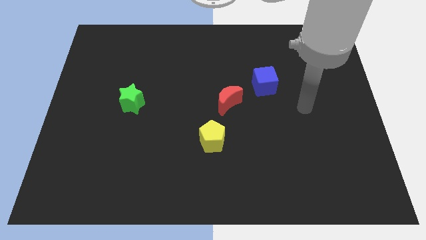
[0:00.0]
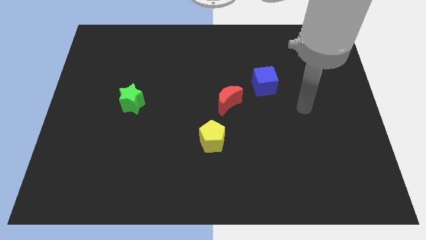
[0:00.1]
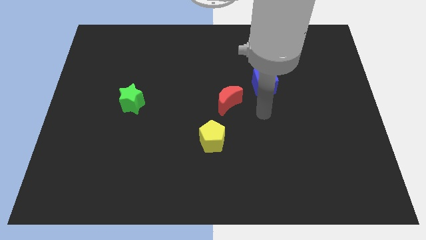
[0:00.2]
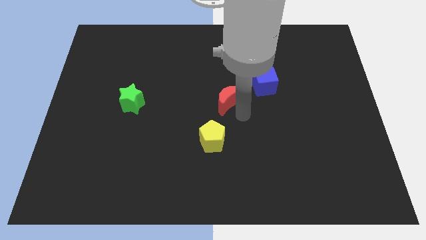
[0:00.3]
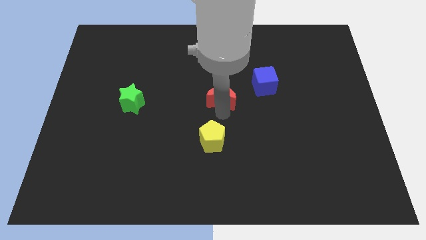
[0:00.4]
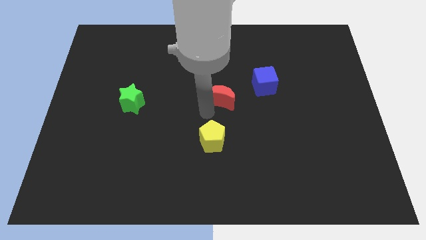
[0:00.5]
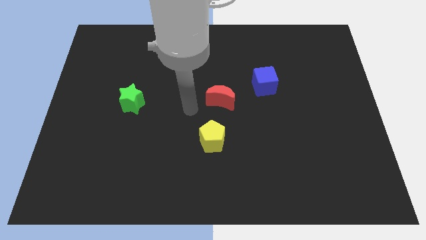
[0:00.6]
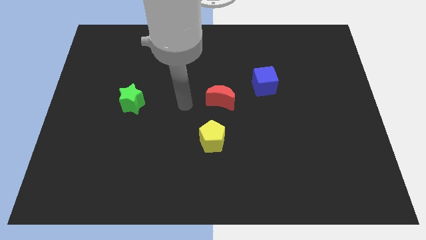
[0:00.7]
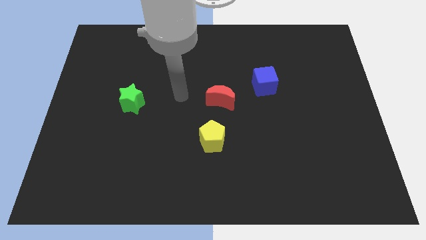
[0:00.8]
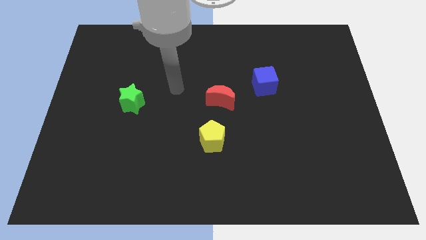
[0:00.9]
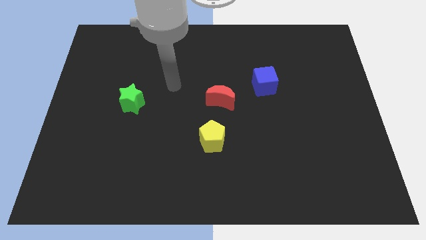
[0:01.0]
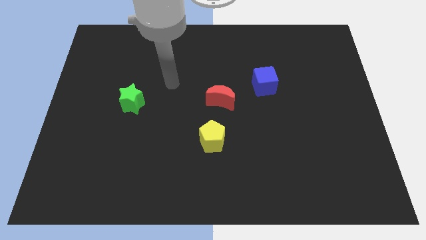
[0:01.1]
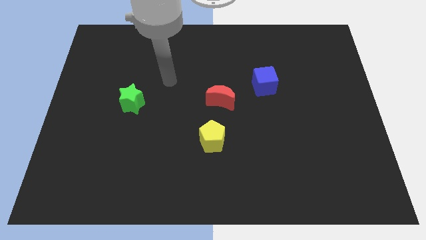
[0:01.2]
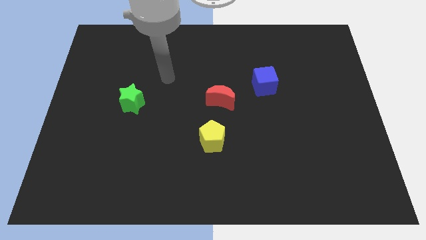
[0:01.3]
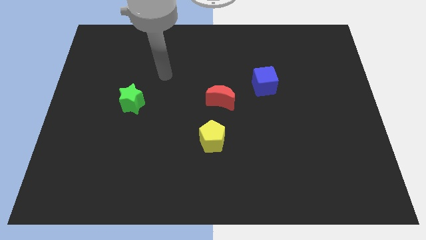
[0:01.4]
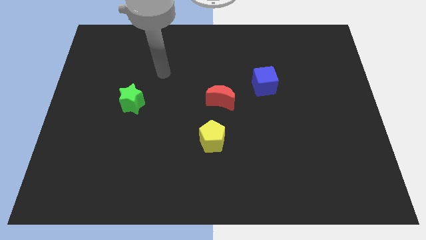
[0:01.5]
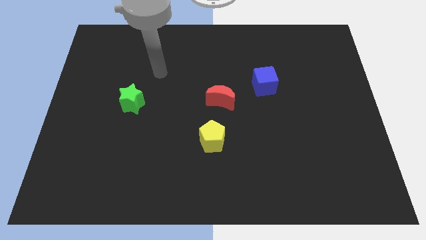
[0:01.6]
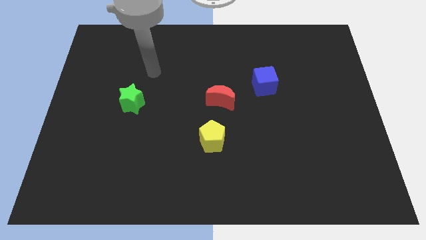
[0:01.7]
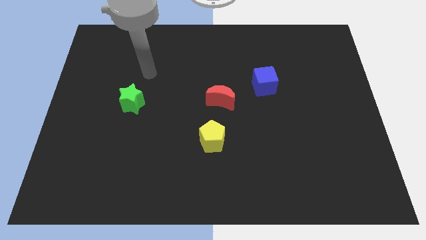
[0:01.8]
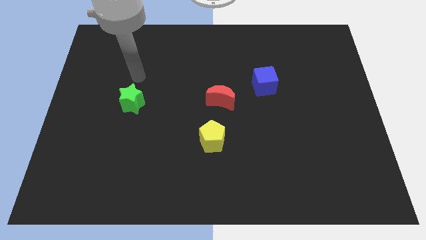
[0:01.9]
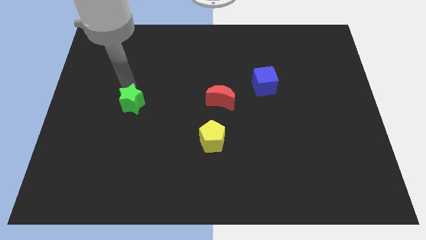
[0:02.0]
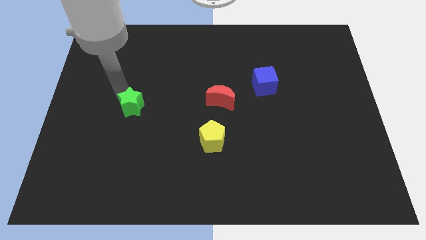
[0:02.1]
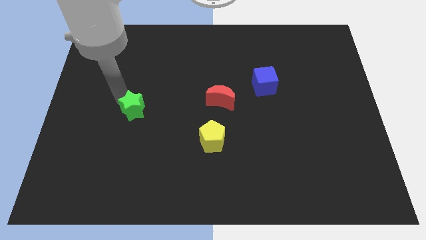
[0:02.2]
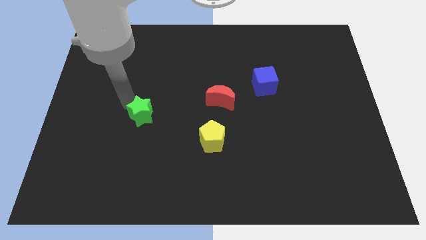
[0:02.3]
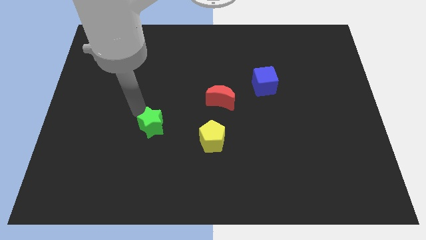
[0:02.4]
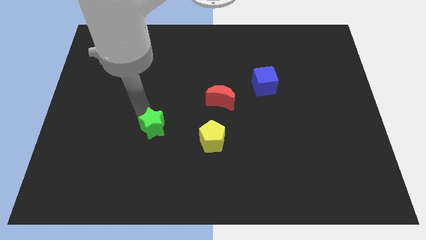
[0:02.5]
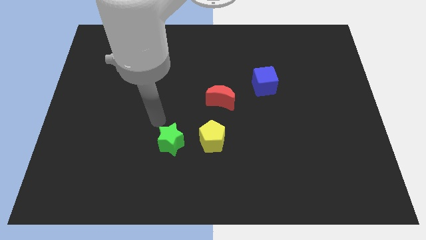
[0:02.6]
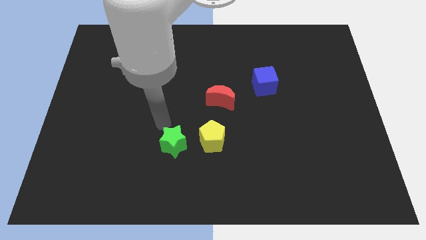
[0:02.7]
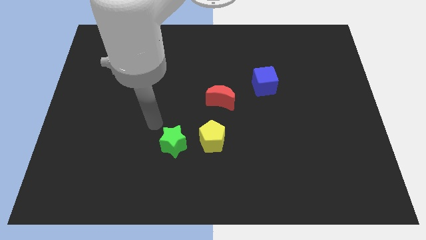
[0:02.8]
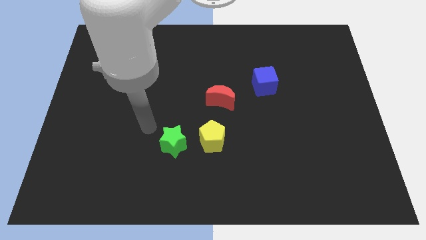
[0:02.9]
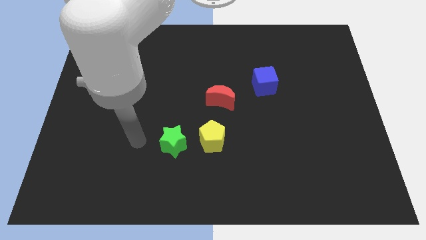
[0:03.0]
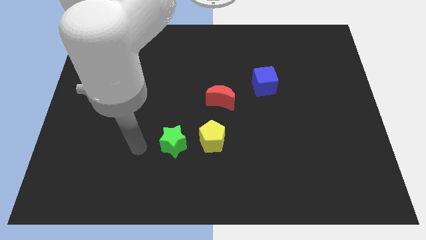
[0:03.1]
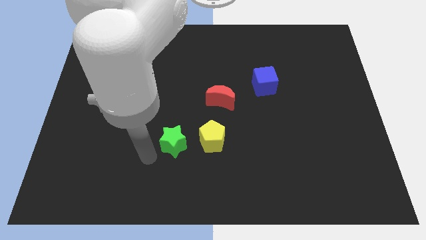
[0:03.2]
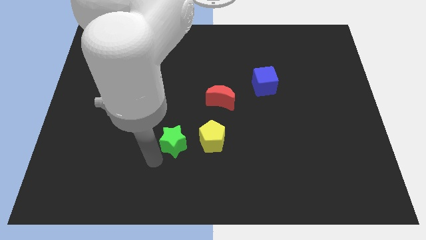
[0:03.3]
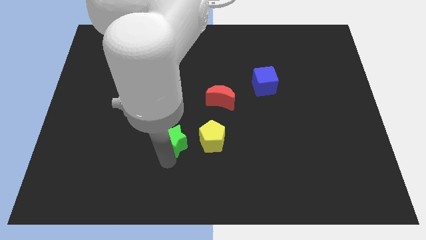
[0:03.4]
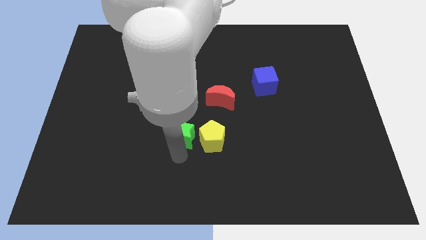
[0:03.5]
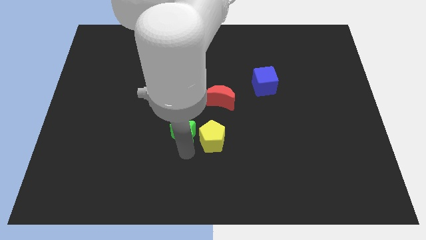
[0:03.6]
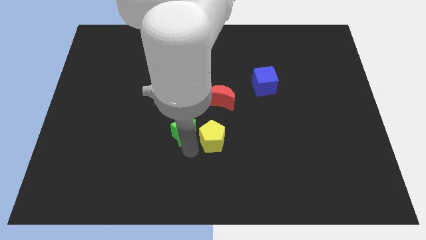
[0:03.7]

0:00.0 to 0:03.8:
push the star towards the pentagon

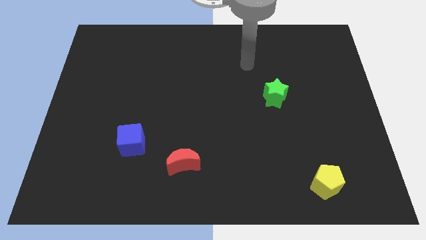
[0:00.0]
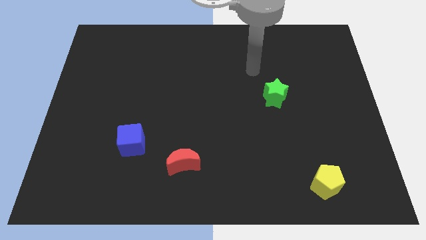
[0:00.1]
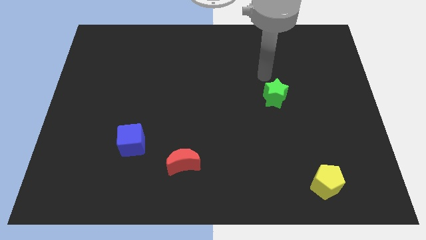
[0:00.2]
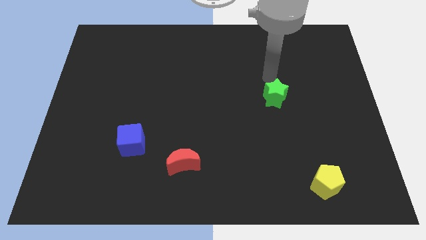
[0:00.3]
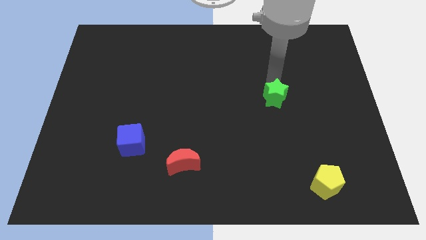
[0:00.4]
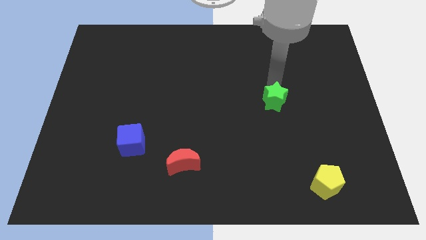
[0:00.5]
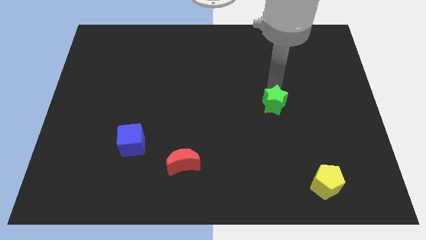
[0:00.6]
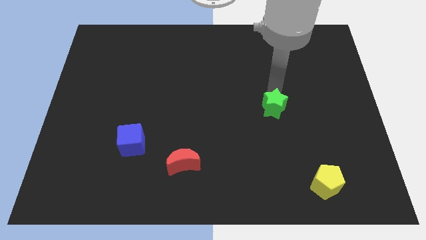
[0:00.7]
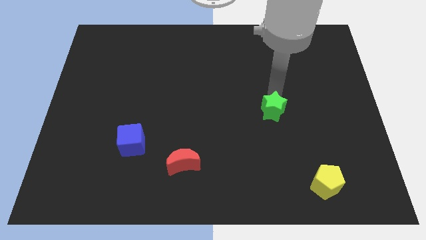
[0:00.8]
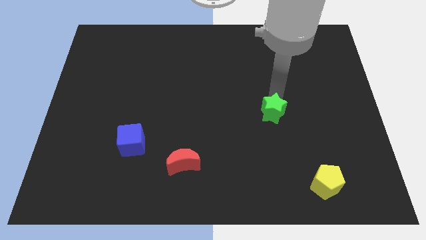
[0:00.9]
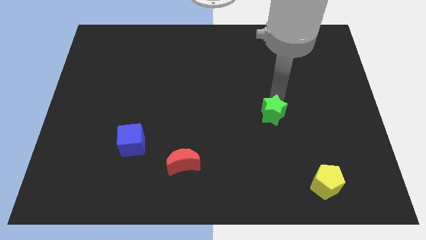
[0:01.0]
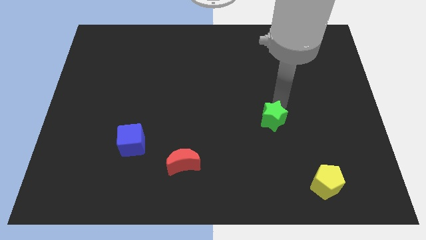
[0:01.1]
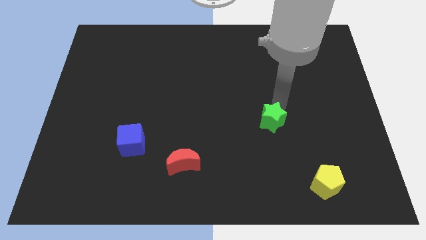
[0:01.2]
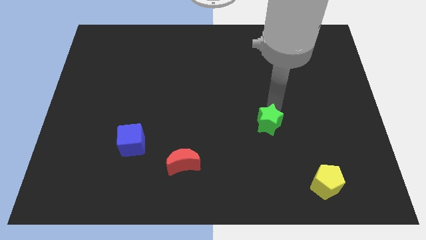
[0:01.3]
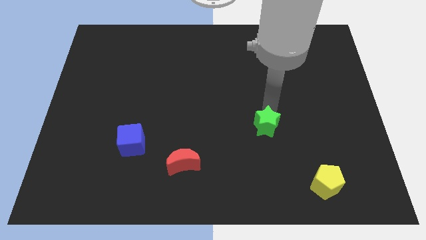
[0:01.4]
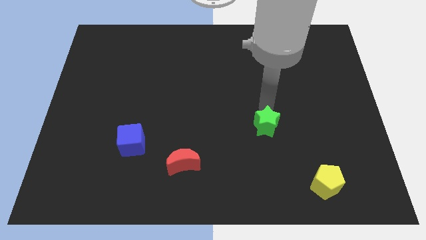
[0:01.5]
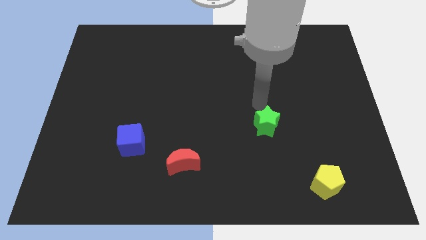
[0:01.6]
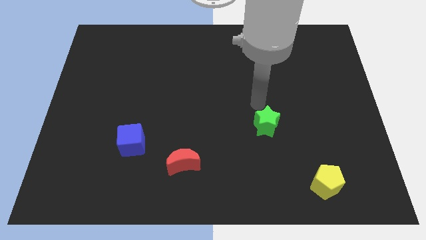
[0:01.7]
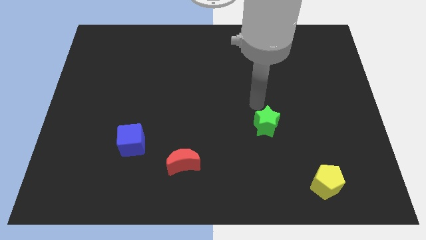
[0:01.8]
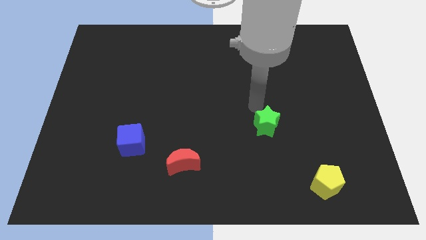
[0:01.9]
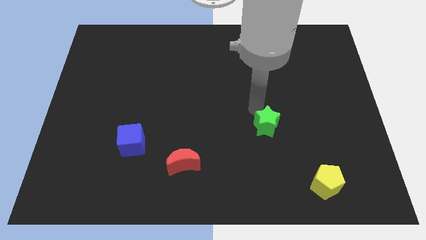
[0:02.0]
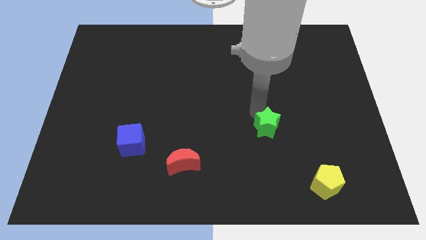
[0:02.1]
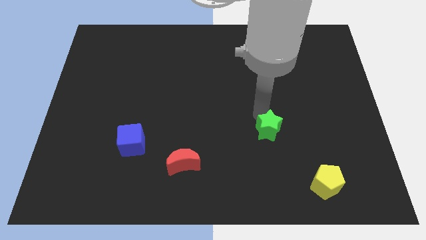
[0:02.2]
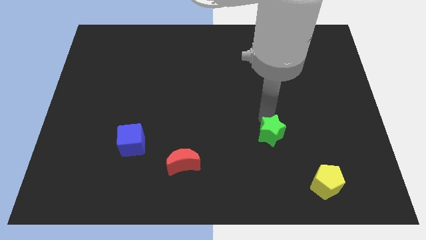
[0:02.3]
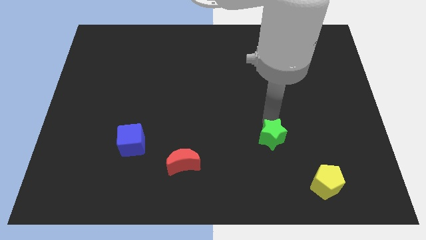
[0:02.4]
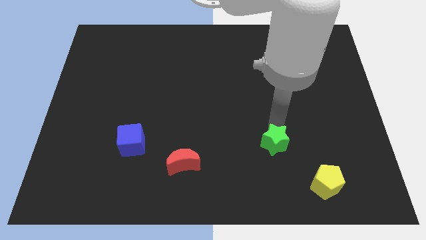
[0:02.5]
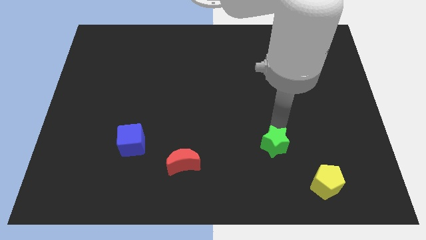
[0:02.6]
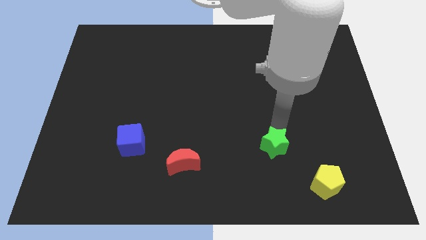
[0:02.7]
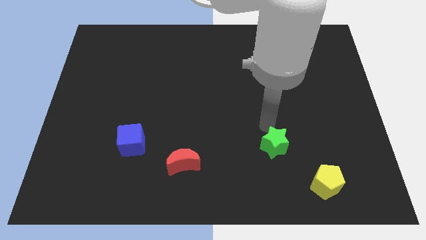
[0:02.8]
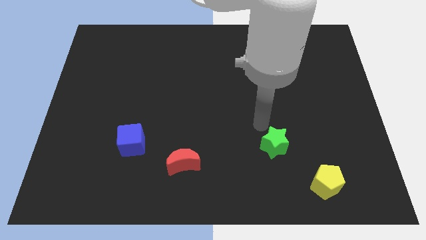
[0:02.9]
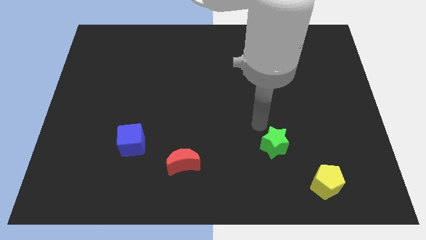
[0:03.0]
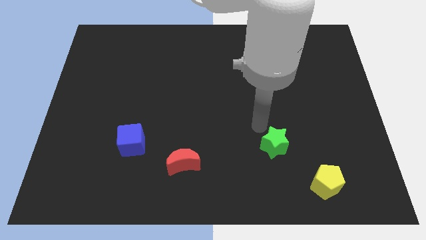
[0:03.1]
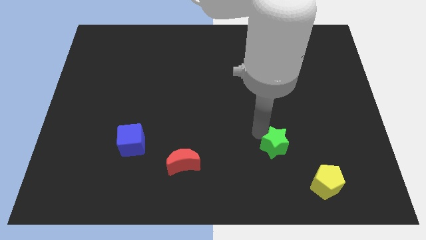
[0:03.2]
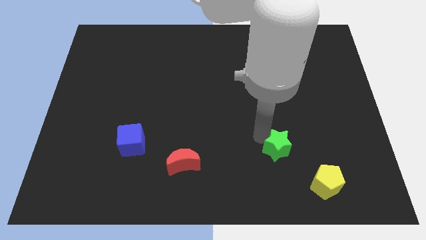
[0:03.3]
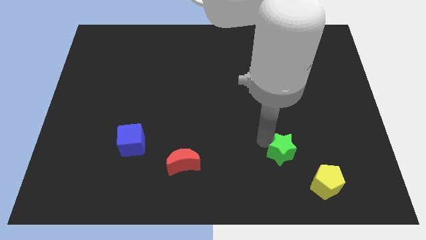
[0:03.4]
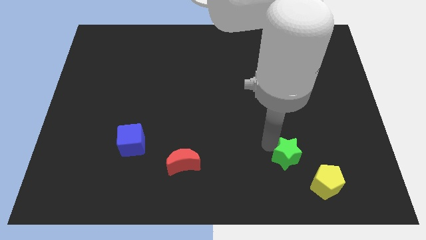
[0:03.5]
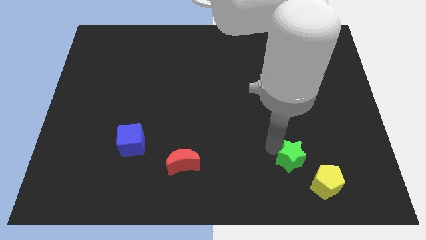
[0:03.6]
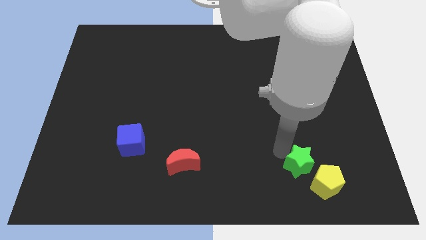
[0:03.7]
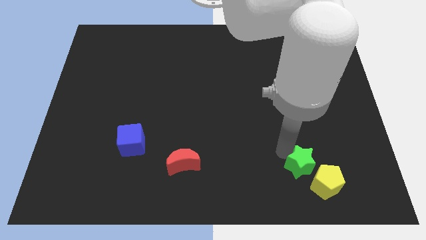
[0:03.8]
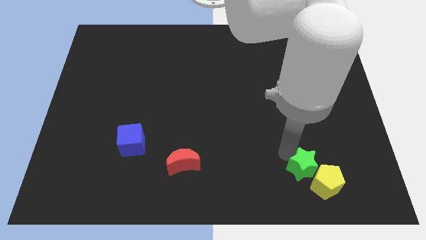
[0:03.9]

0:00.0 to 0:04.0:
put the green block next to the pentagon

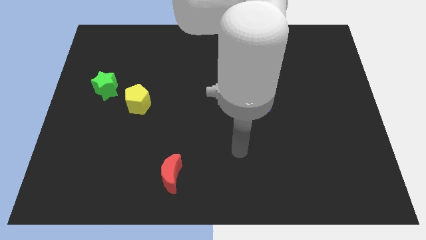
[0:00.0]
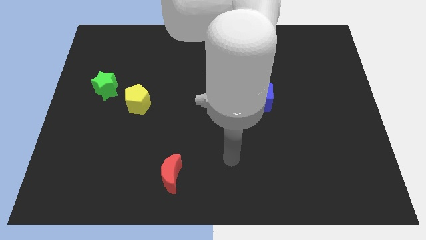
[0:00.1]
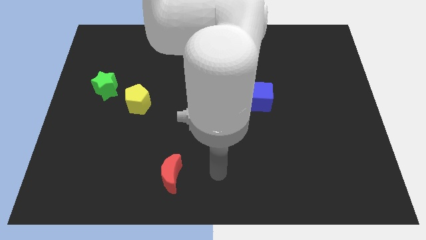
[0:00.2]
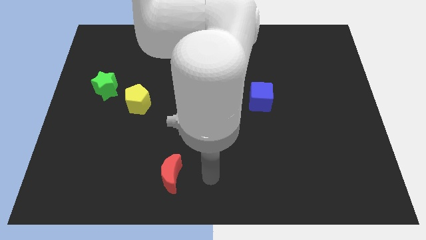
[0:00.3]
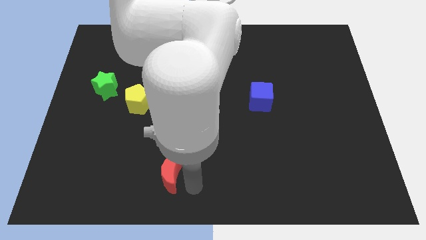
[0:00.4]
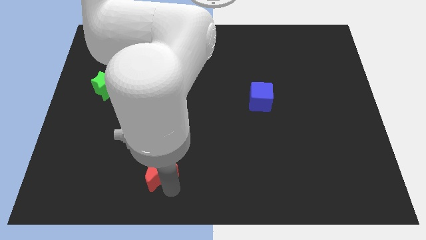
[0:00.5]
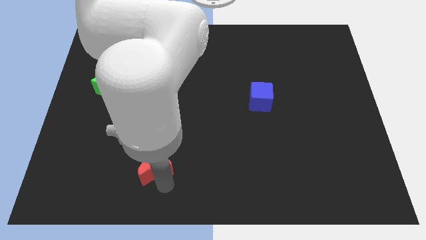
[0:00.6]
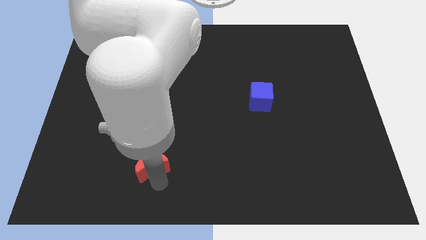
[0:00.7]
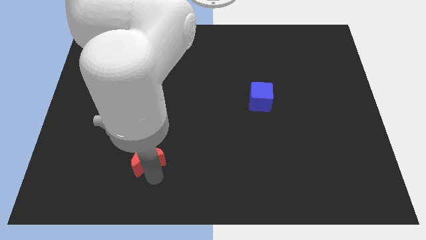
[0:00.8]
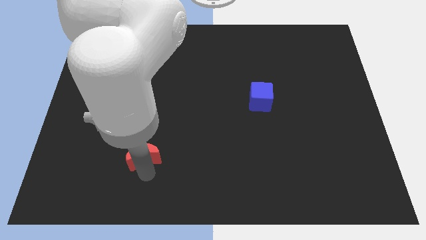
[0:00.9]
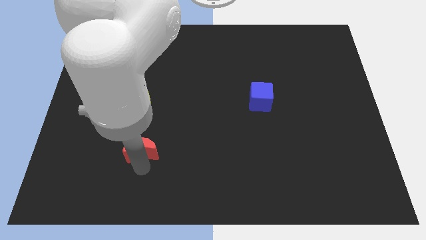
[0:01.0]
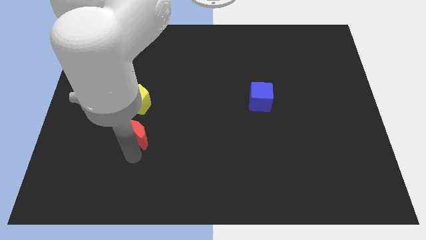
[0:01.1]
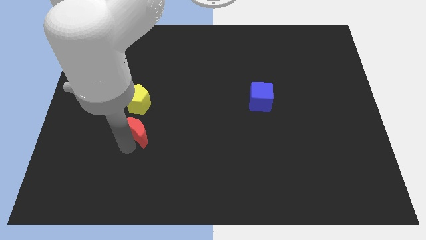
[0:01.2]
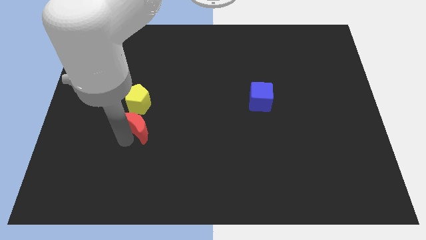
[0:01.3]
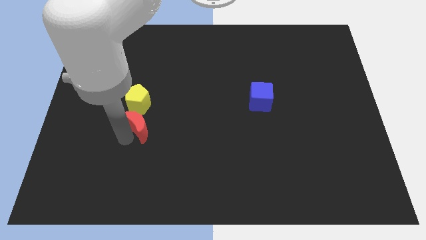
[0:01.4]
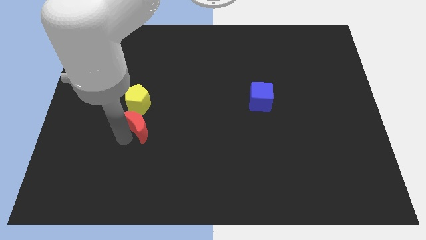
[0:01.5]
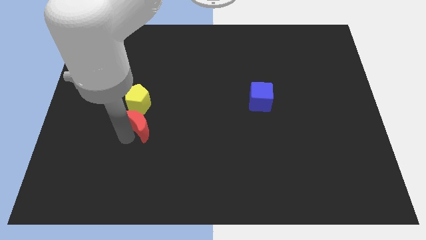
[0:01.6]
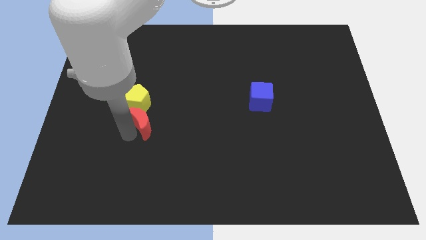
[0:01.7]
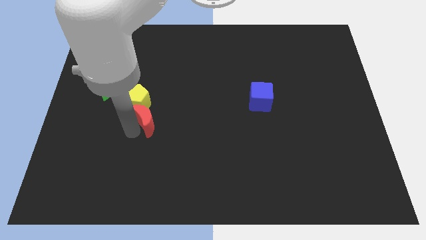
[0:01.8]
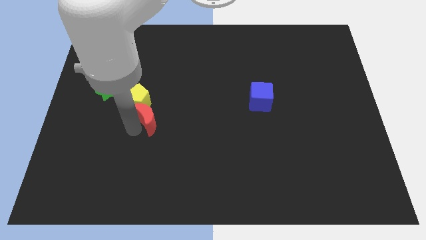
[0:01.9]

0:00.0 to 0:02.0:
put the red moon next to the pentagon
